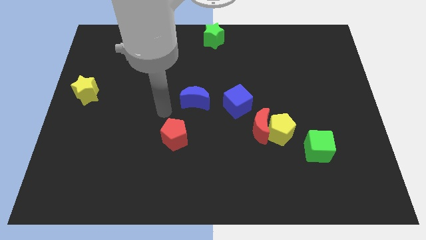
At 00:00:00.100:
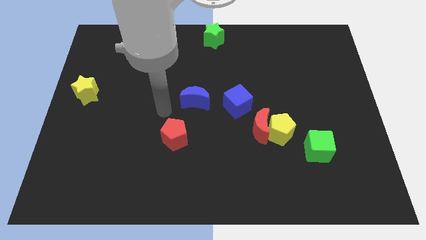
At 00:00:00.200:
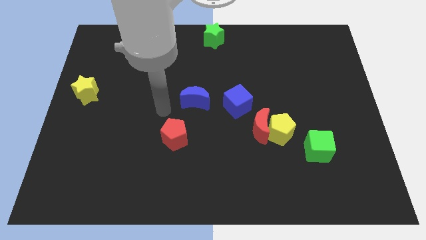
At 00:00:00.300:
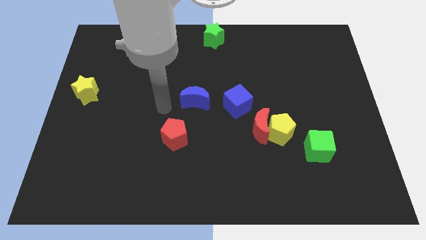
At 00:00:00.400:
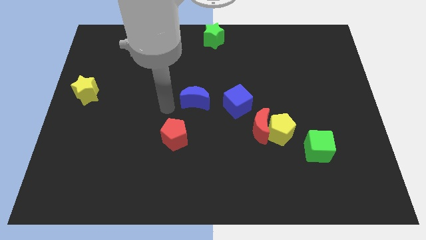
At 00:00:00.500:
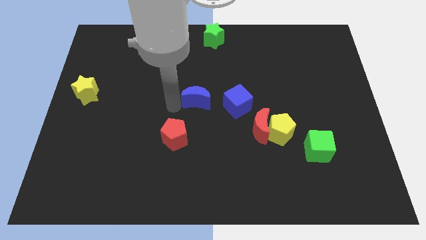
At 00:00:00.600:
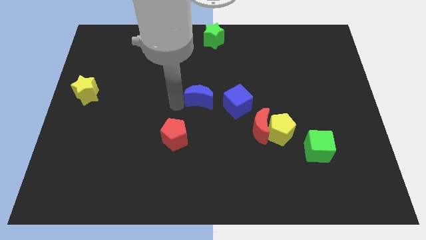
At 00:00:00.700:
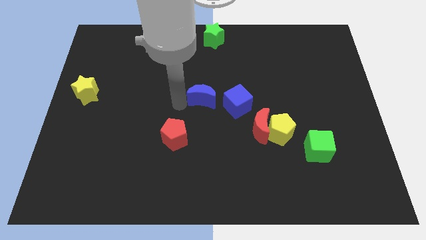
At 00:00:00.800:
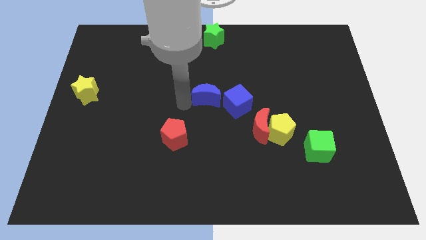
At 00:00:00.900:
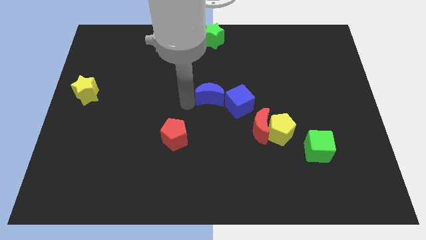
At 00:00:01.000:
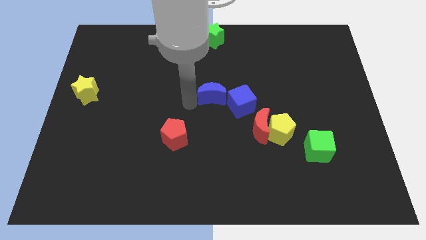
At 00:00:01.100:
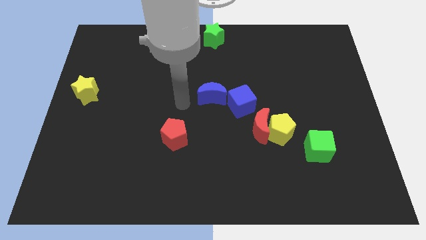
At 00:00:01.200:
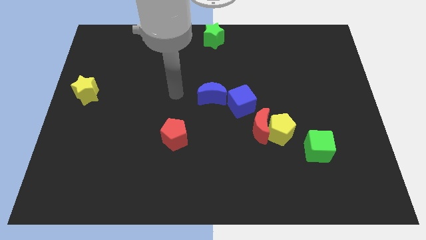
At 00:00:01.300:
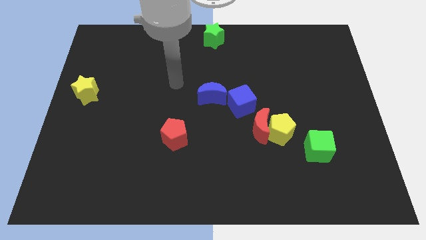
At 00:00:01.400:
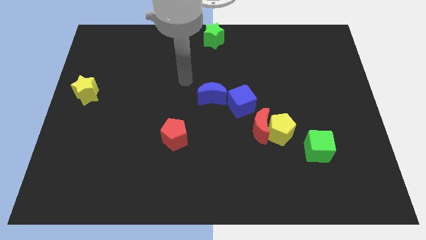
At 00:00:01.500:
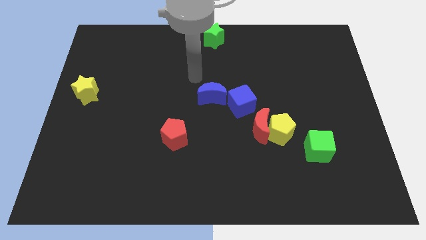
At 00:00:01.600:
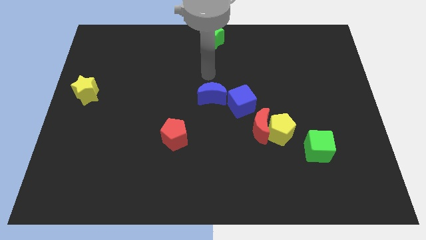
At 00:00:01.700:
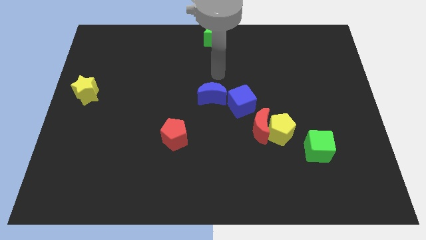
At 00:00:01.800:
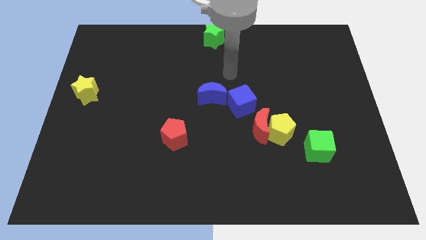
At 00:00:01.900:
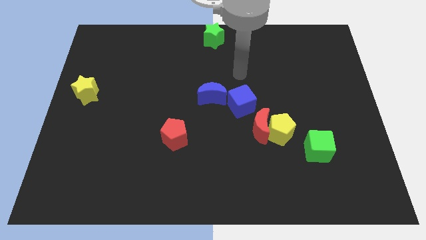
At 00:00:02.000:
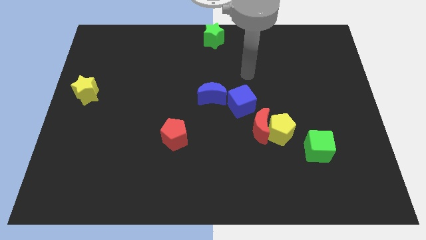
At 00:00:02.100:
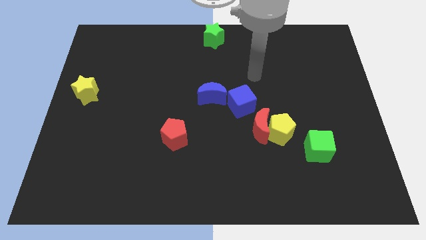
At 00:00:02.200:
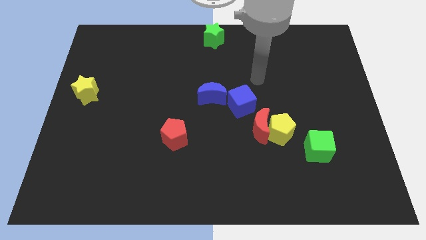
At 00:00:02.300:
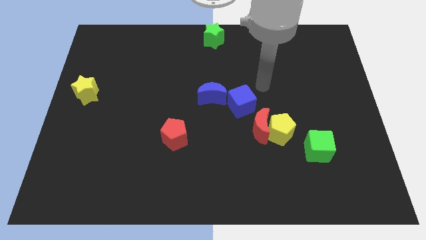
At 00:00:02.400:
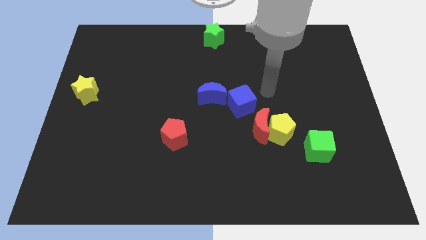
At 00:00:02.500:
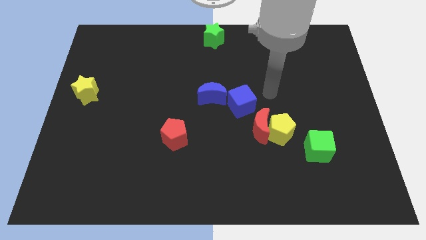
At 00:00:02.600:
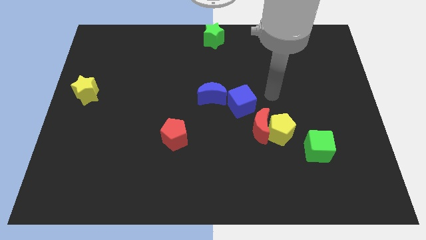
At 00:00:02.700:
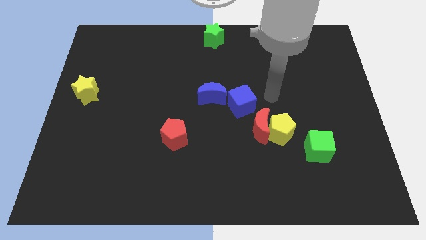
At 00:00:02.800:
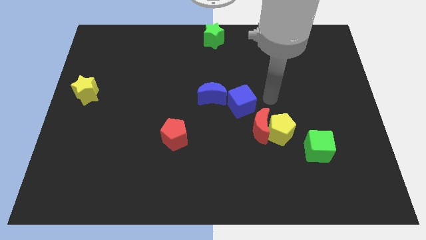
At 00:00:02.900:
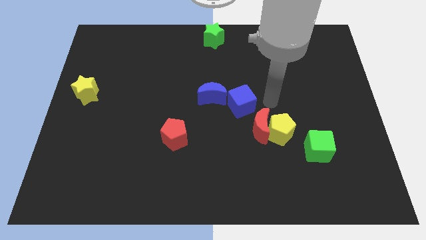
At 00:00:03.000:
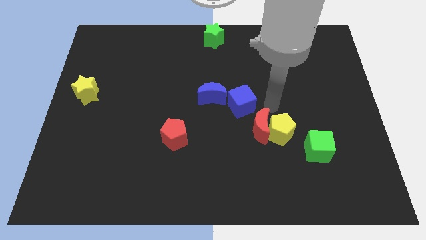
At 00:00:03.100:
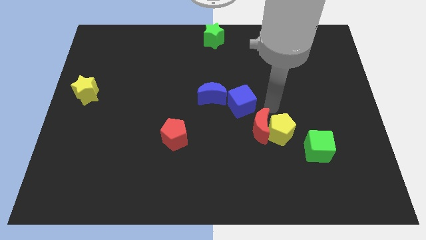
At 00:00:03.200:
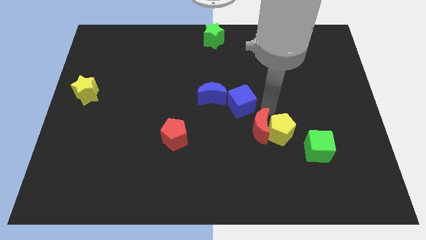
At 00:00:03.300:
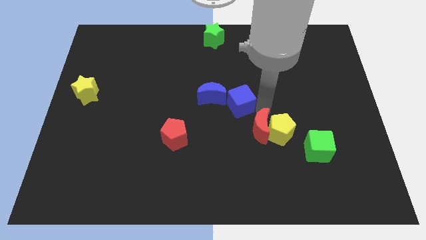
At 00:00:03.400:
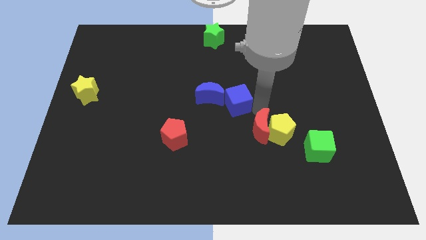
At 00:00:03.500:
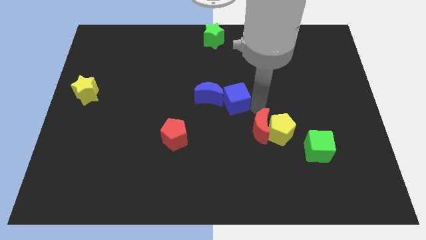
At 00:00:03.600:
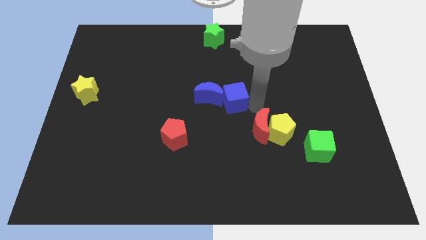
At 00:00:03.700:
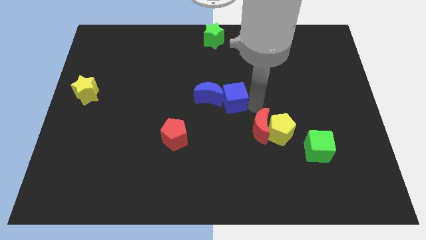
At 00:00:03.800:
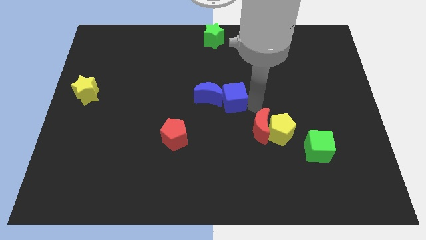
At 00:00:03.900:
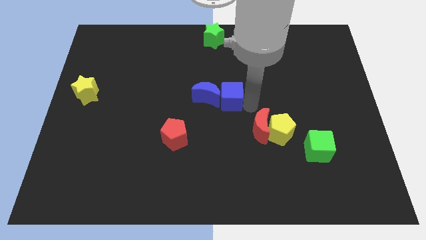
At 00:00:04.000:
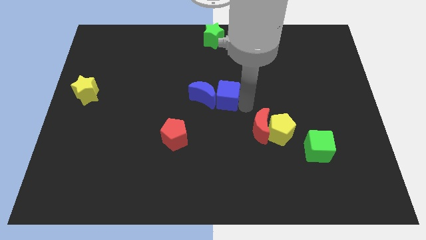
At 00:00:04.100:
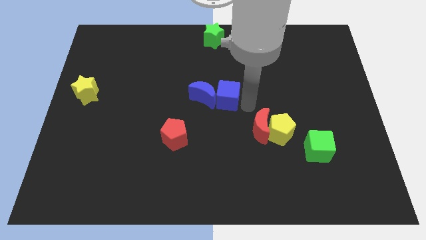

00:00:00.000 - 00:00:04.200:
push the blue cube into the blue moon

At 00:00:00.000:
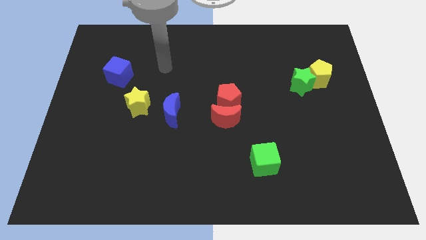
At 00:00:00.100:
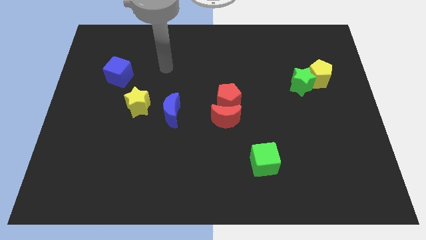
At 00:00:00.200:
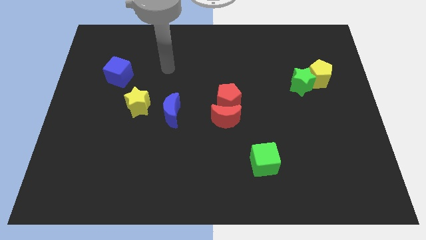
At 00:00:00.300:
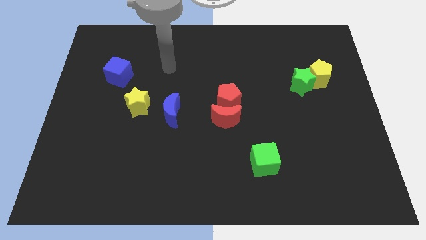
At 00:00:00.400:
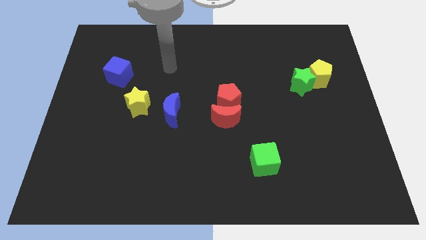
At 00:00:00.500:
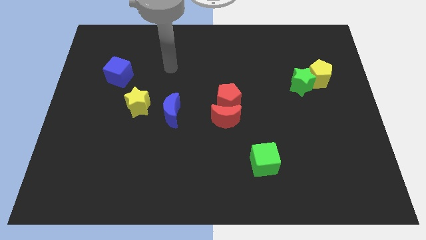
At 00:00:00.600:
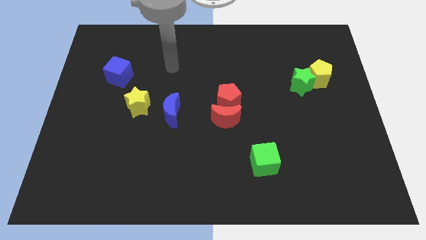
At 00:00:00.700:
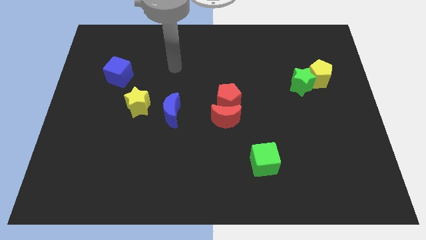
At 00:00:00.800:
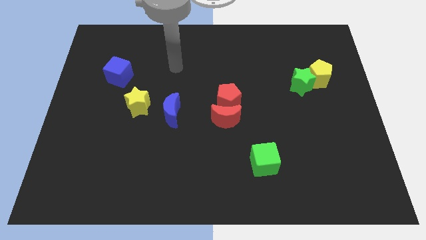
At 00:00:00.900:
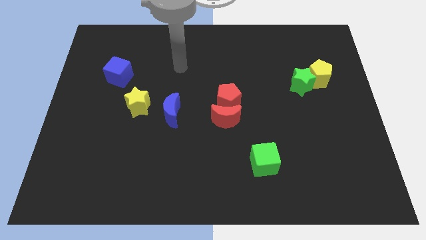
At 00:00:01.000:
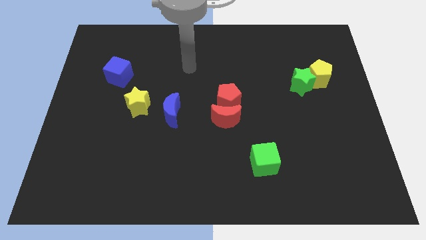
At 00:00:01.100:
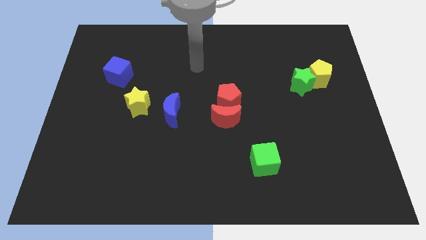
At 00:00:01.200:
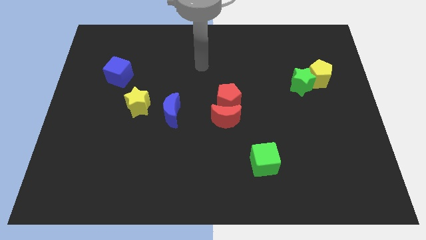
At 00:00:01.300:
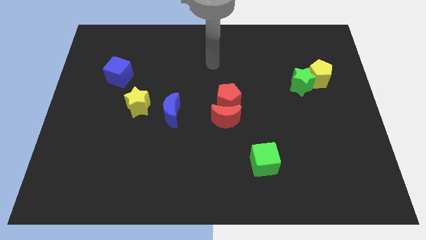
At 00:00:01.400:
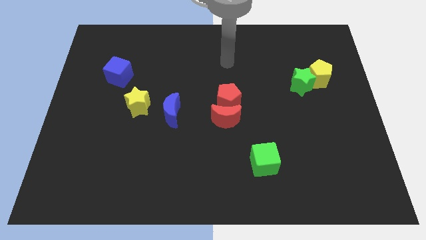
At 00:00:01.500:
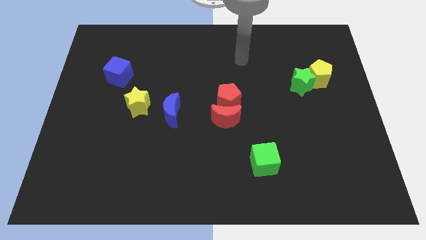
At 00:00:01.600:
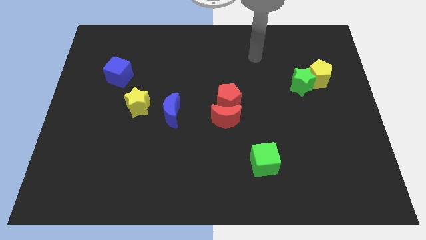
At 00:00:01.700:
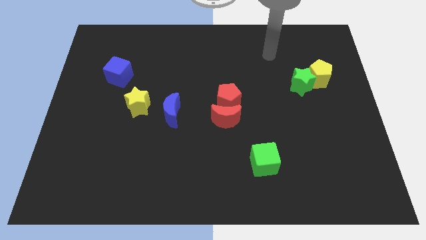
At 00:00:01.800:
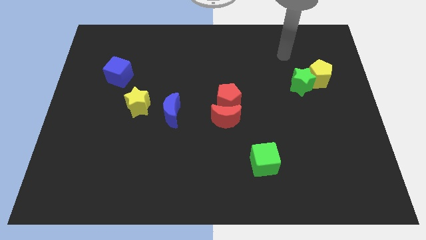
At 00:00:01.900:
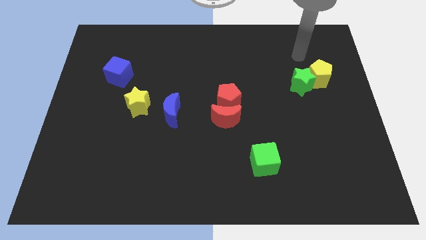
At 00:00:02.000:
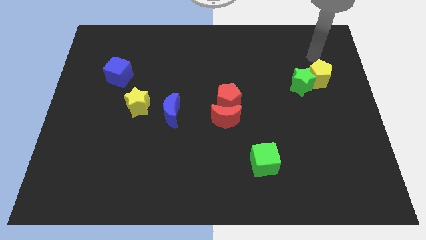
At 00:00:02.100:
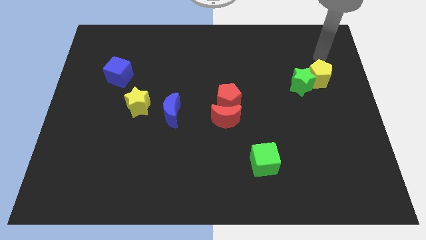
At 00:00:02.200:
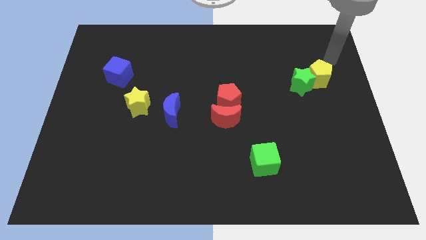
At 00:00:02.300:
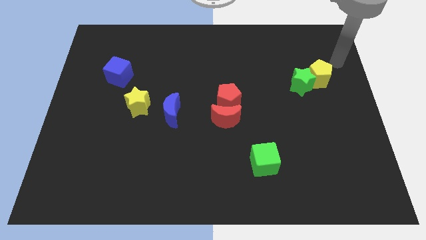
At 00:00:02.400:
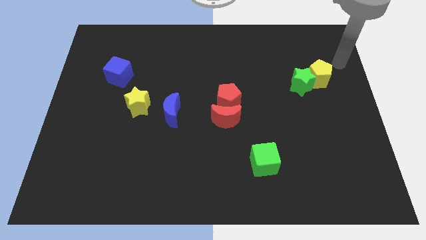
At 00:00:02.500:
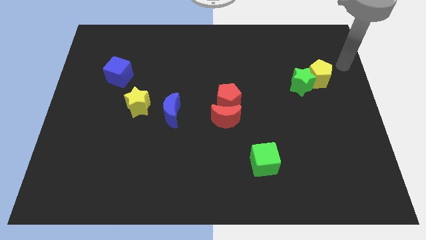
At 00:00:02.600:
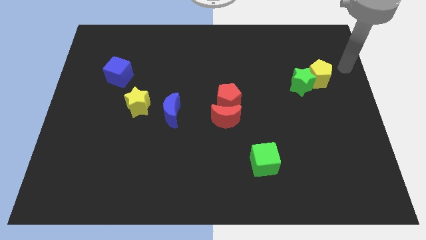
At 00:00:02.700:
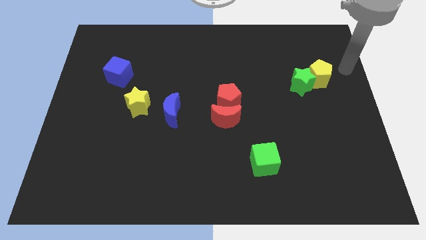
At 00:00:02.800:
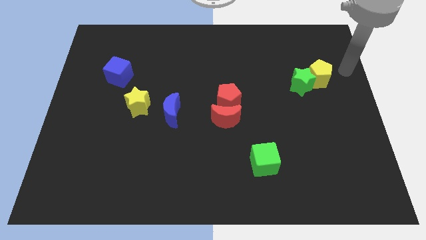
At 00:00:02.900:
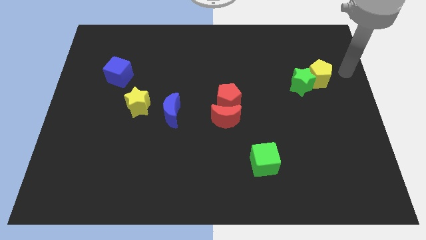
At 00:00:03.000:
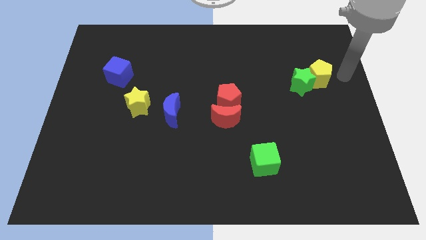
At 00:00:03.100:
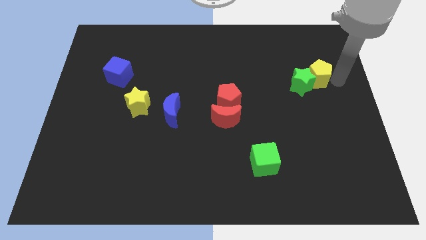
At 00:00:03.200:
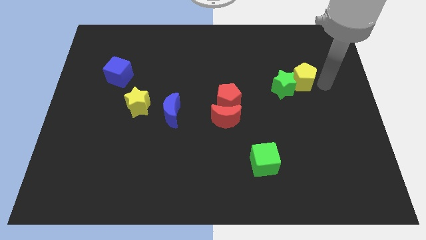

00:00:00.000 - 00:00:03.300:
move yourself to the right side of the yellow pentagon

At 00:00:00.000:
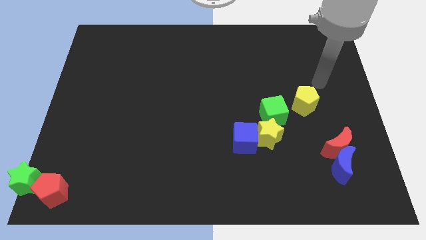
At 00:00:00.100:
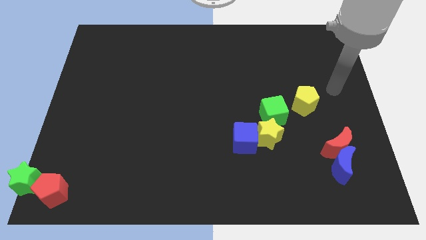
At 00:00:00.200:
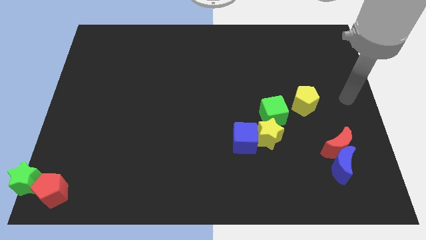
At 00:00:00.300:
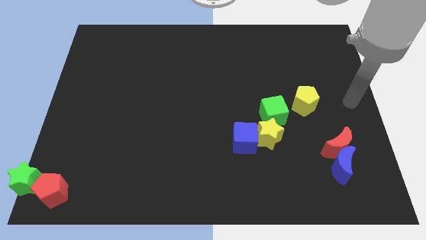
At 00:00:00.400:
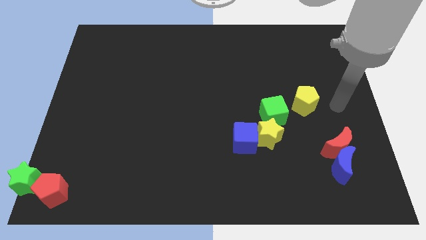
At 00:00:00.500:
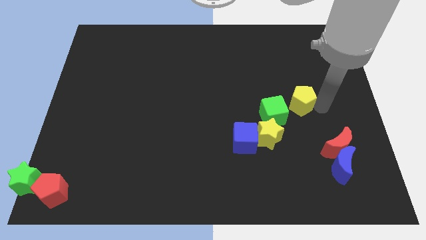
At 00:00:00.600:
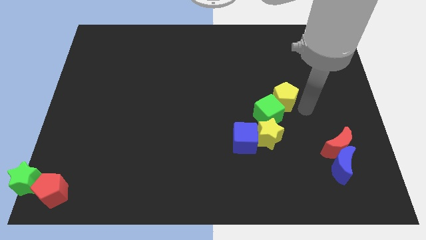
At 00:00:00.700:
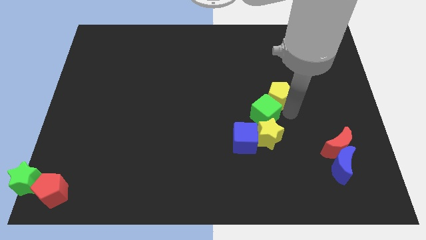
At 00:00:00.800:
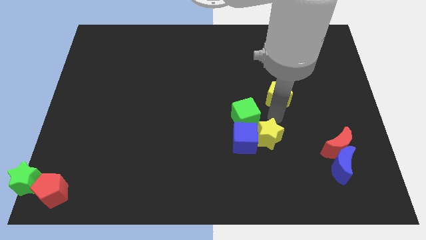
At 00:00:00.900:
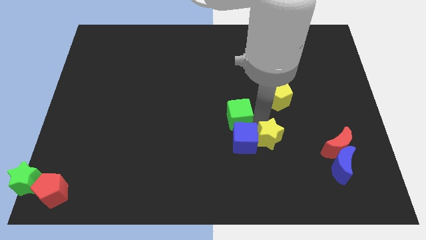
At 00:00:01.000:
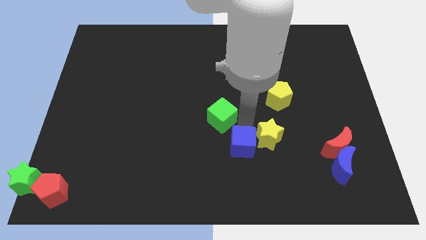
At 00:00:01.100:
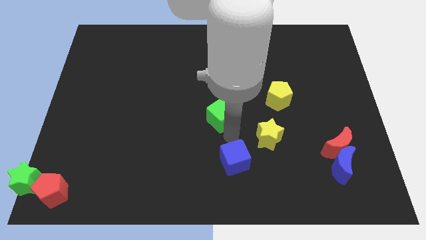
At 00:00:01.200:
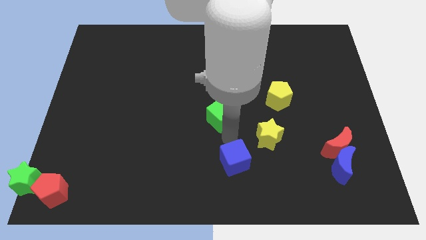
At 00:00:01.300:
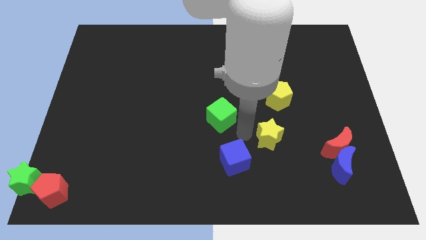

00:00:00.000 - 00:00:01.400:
move the green cube away from the yellow pentagon
